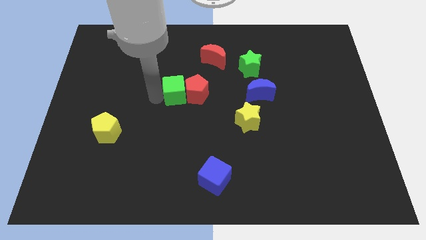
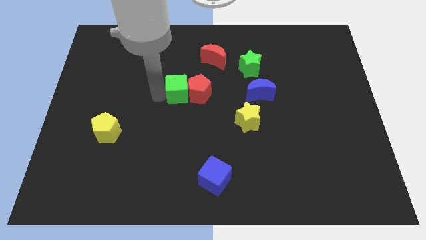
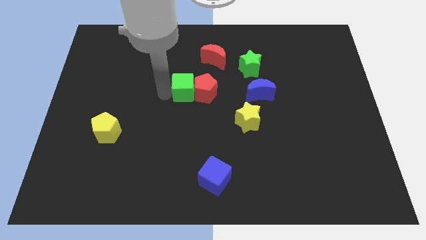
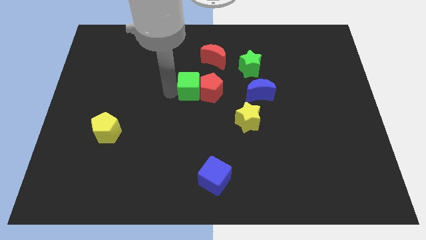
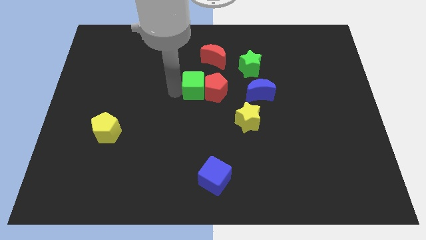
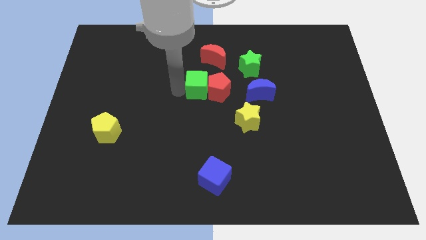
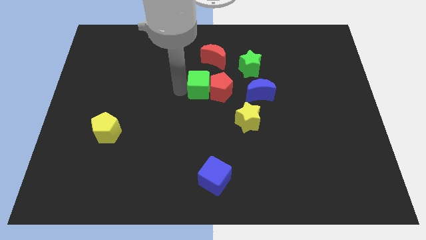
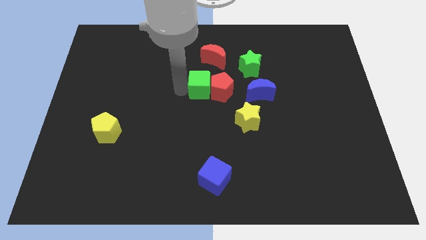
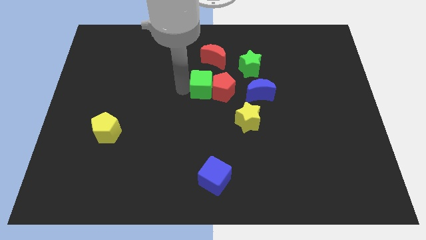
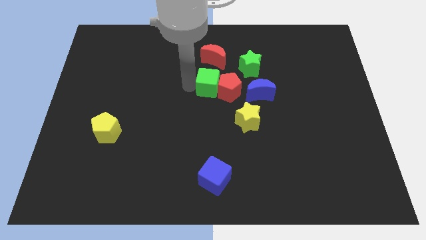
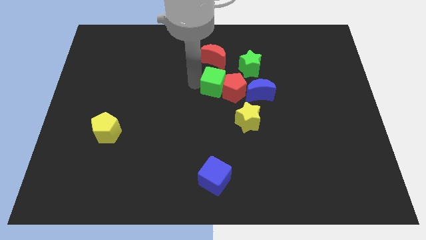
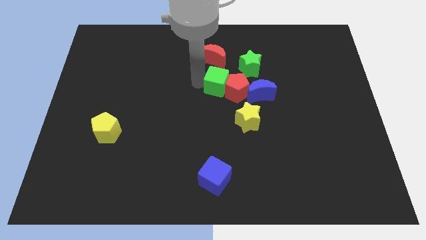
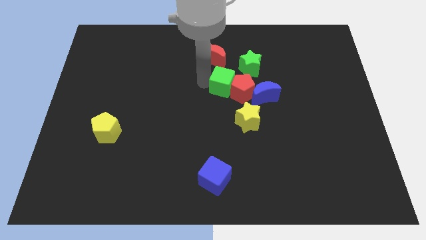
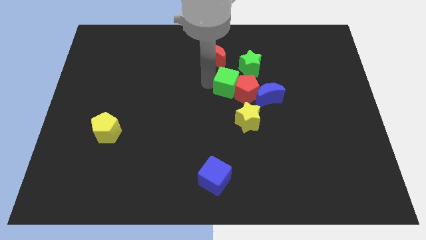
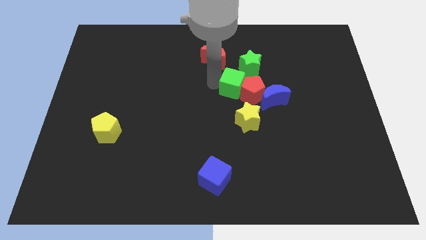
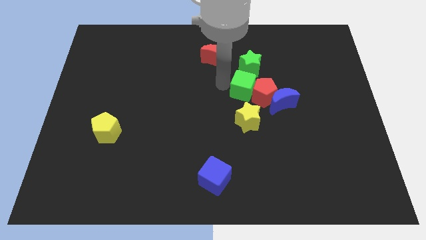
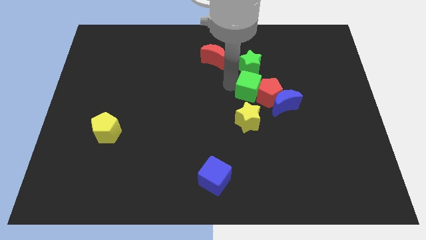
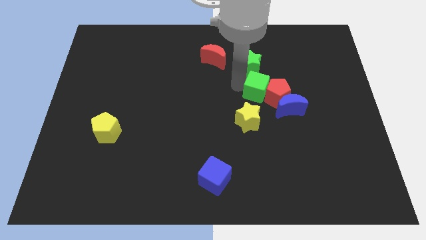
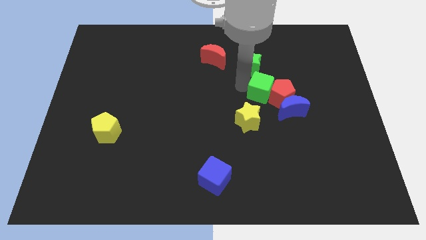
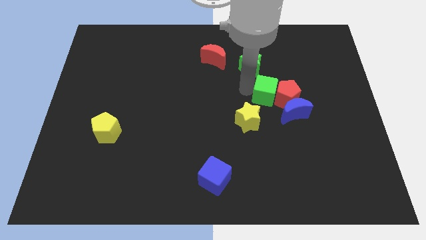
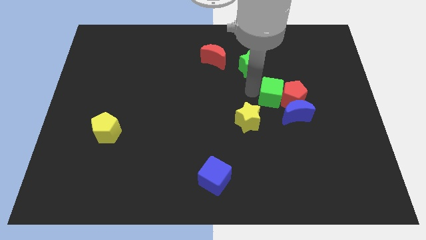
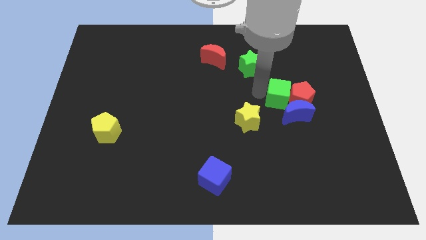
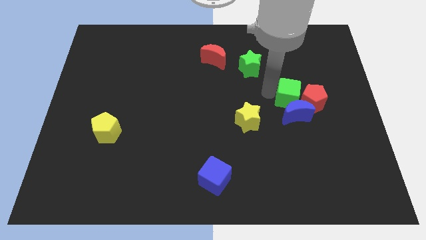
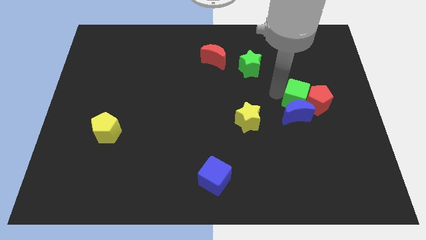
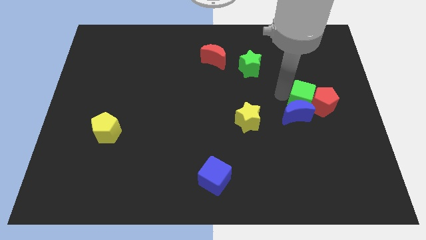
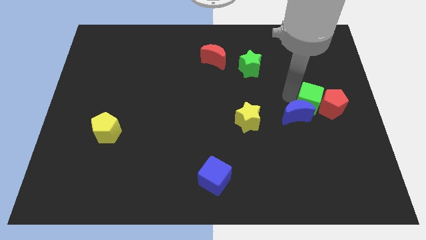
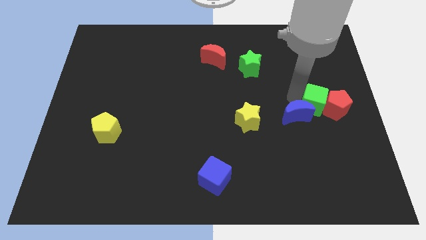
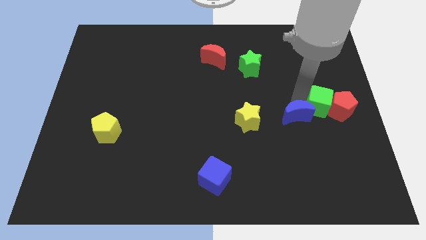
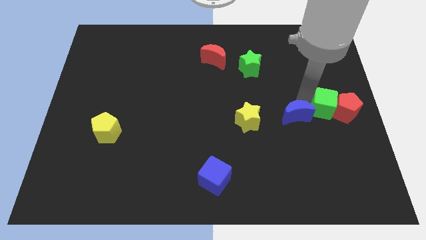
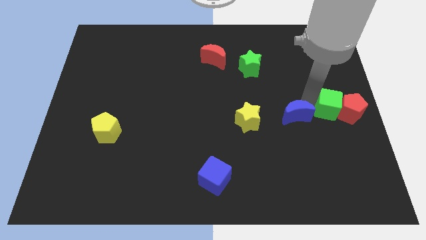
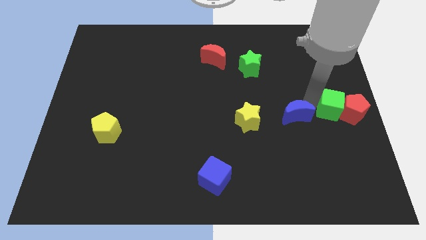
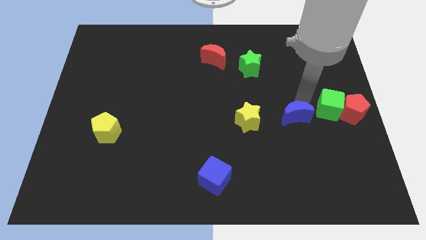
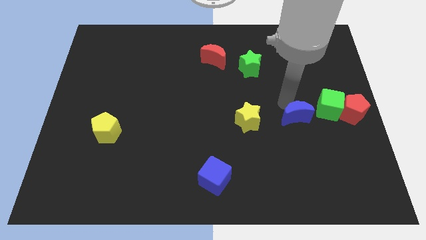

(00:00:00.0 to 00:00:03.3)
move the red pentagon and green cube towards center right

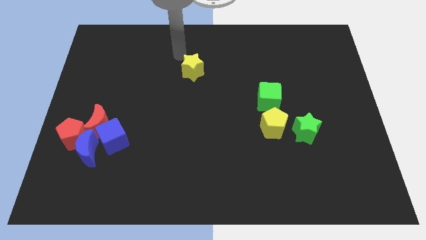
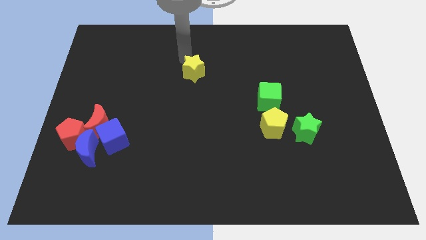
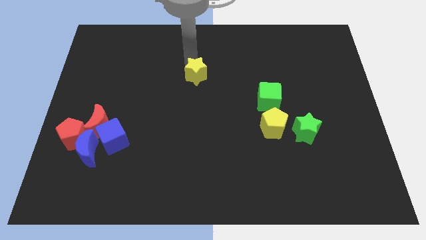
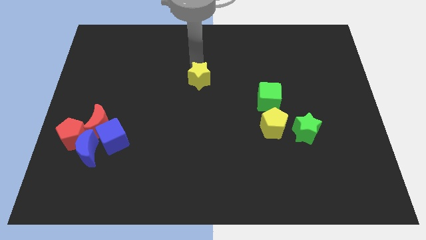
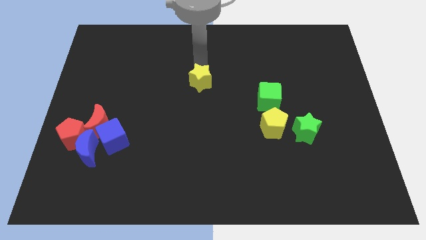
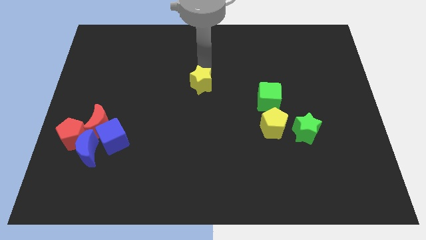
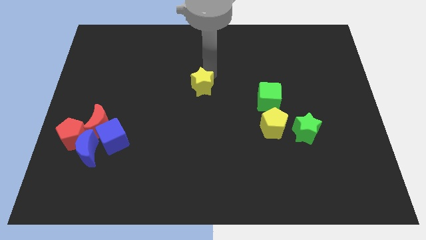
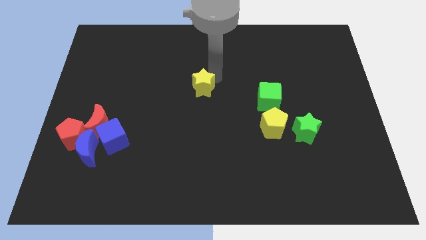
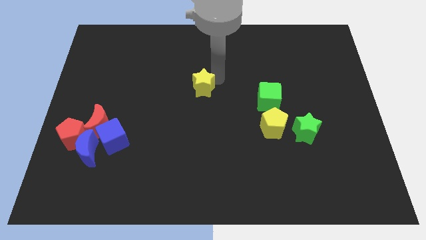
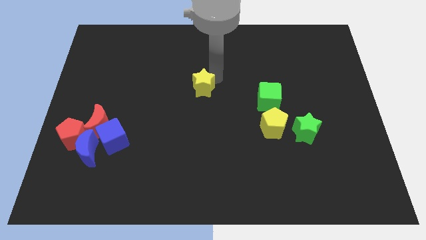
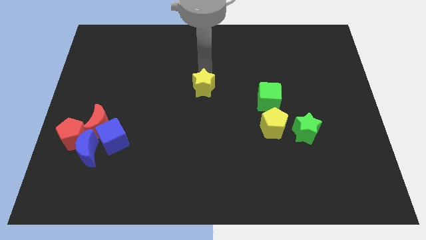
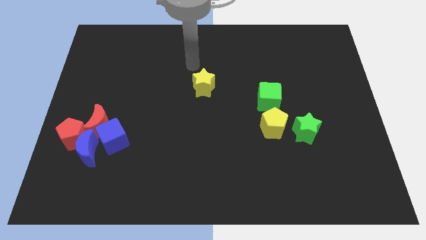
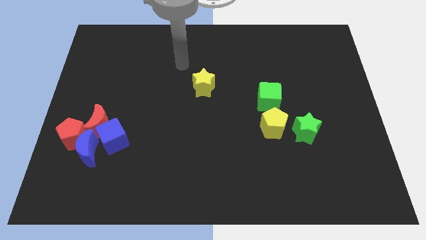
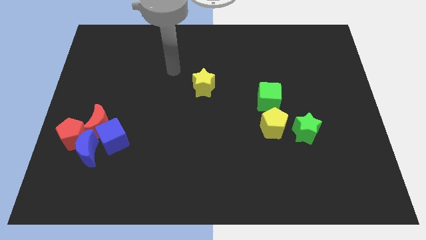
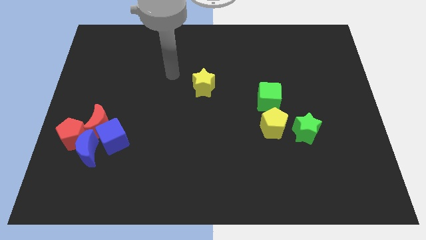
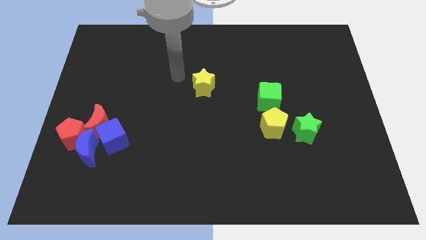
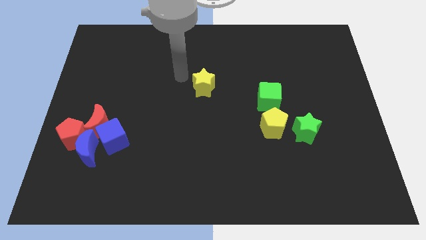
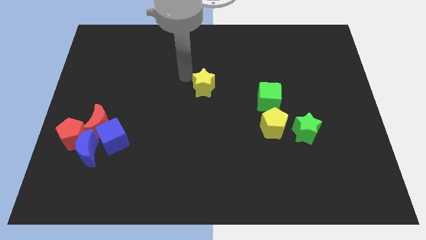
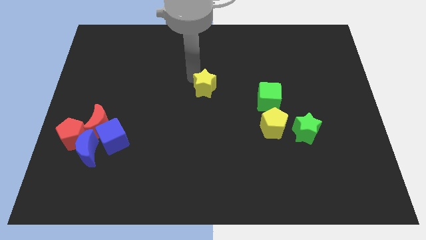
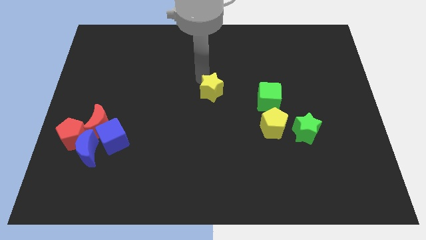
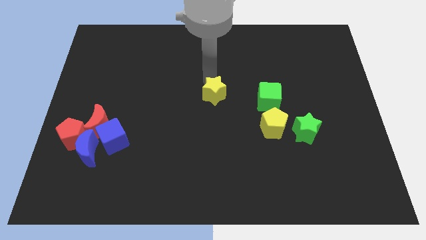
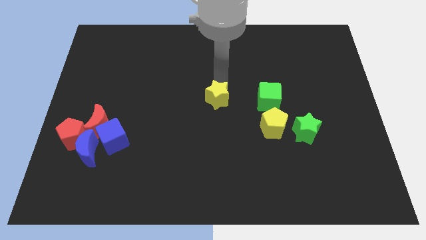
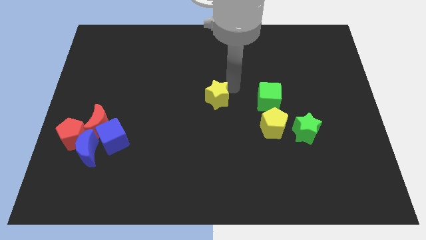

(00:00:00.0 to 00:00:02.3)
move the yellow star to the left of the green cube

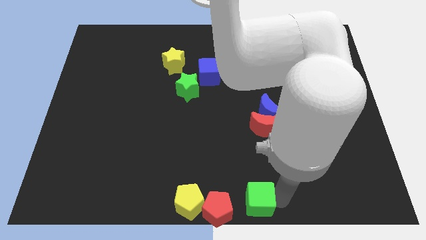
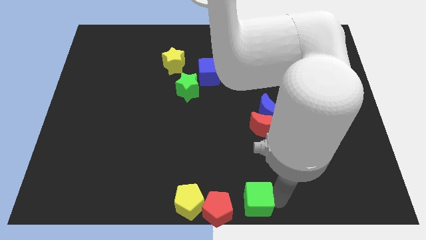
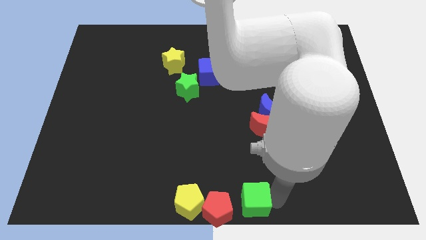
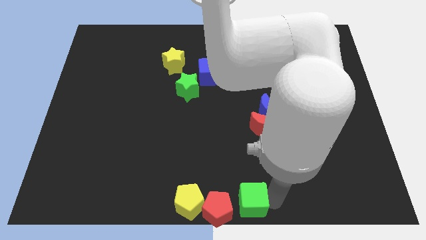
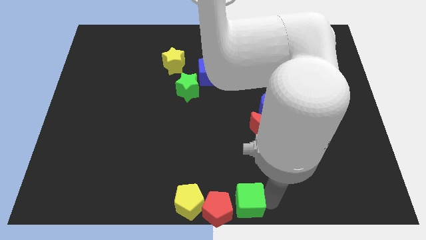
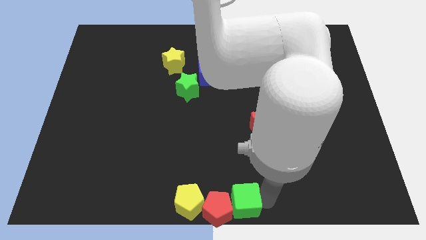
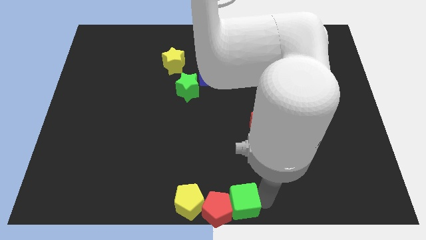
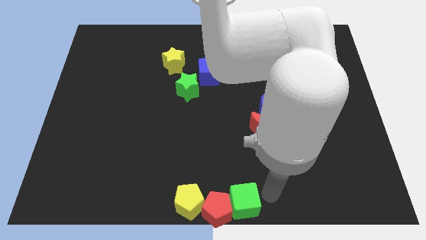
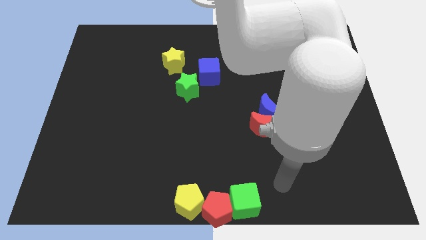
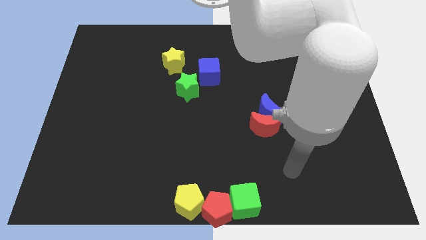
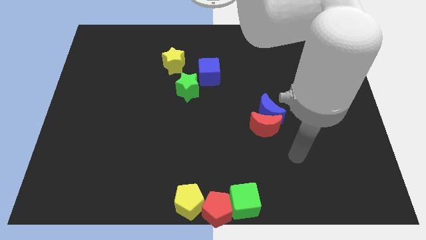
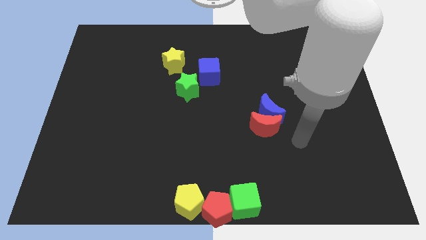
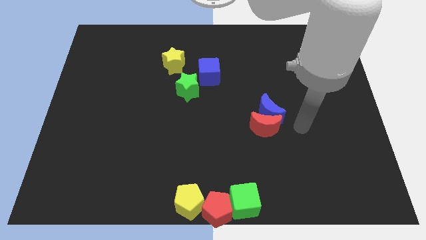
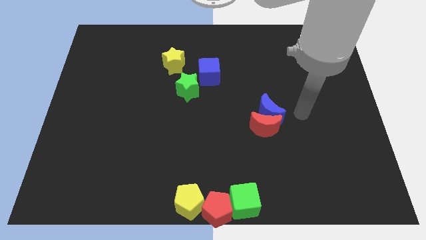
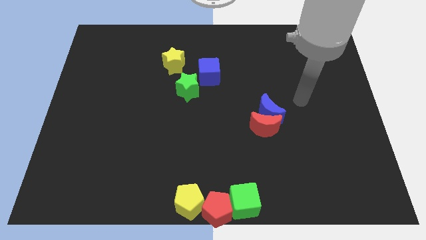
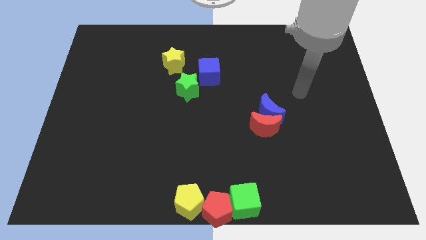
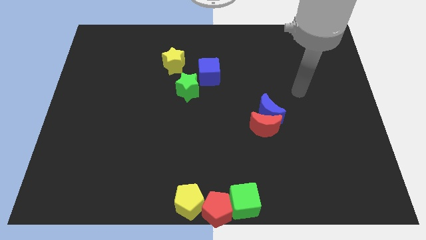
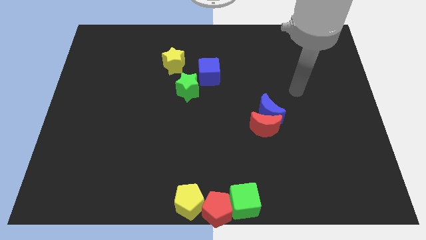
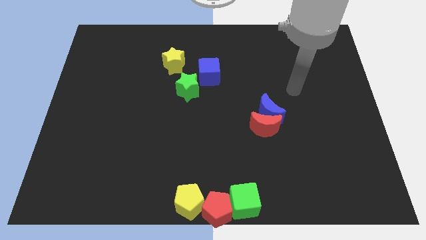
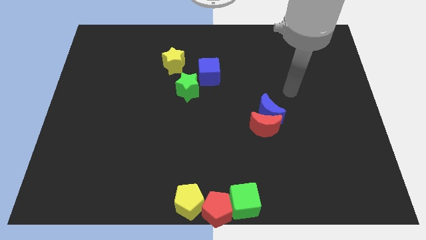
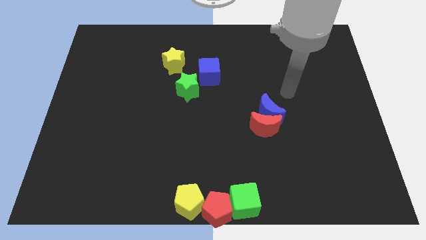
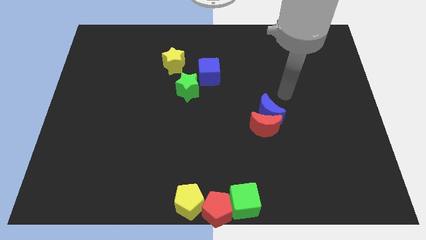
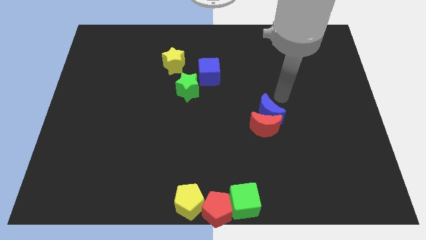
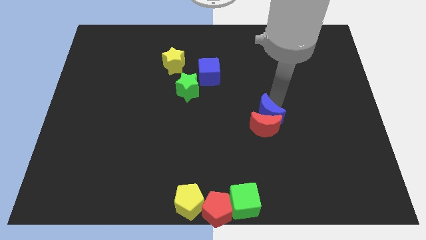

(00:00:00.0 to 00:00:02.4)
push the green cube into the red pentagon

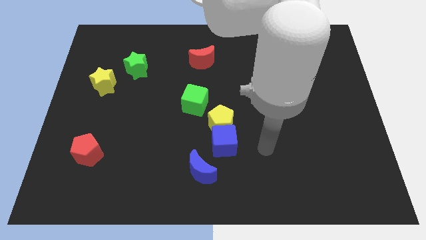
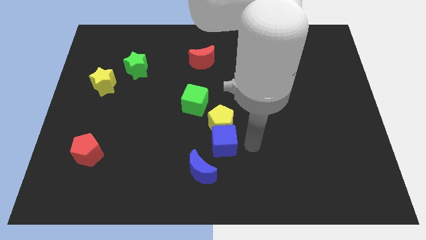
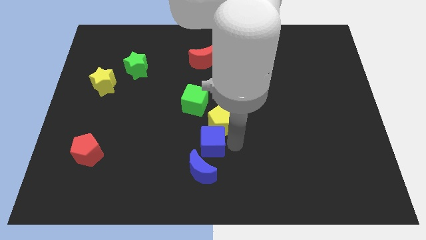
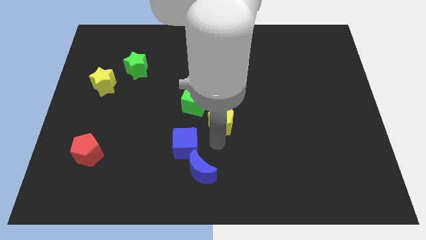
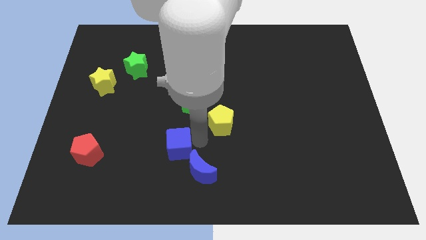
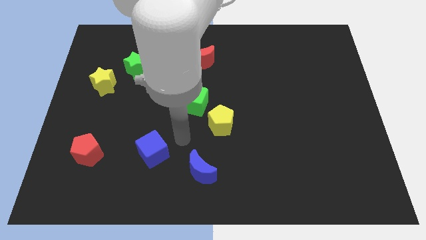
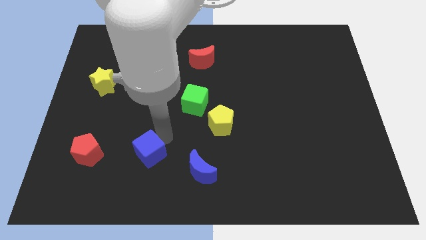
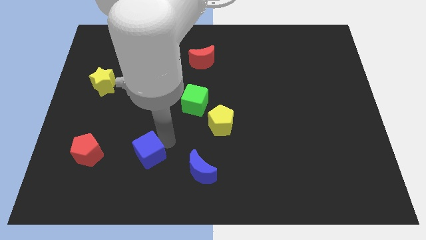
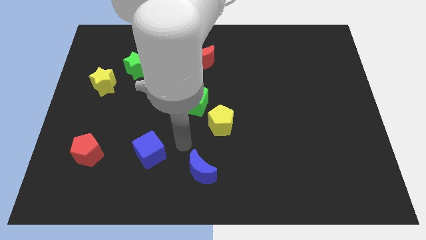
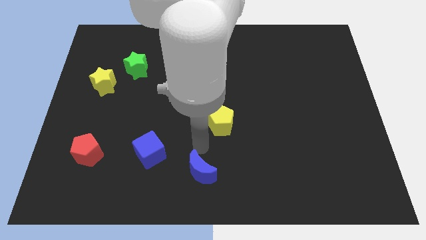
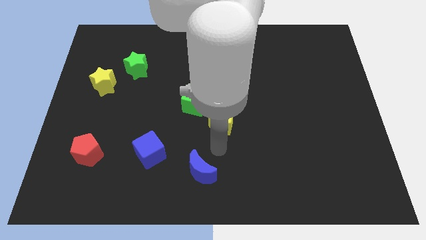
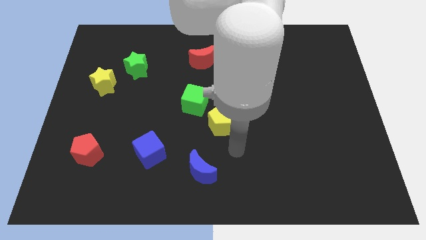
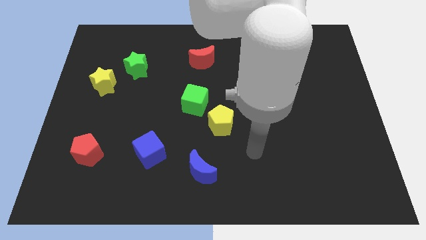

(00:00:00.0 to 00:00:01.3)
separate blue cube from the yellow pentagon
